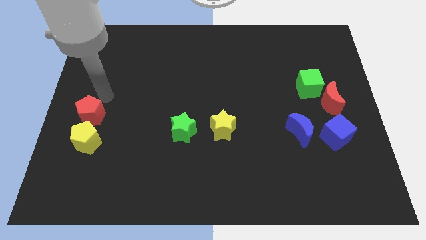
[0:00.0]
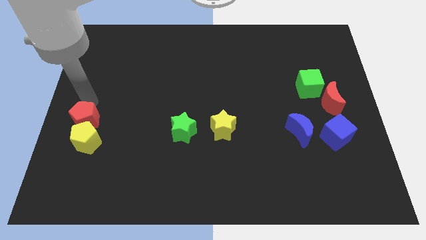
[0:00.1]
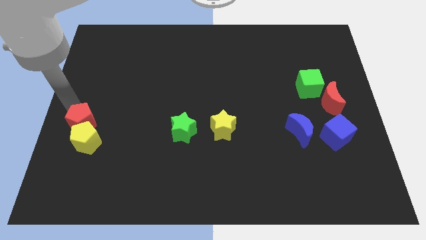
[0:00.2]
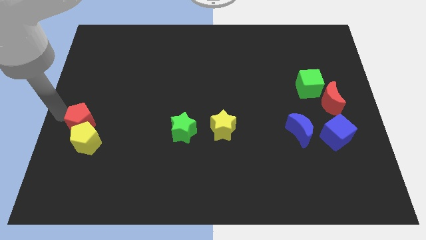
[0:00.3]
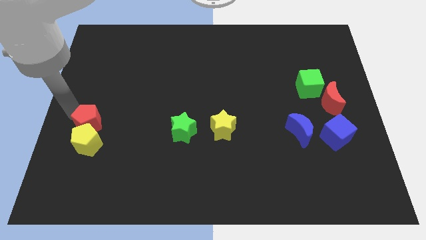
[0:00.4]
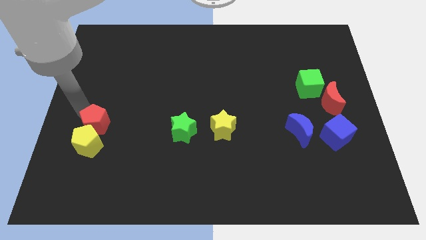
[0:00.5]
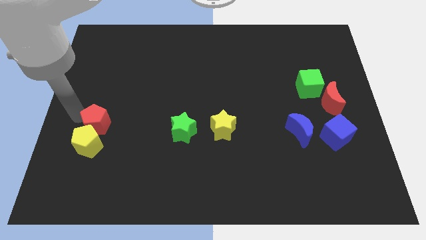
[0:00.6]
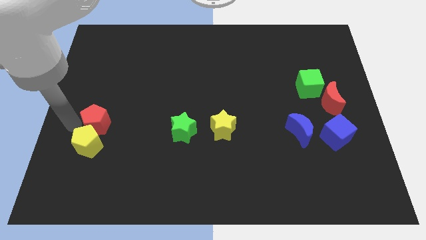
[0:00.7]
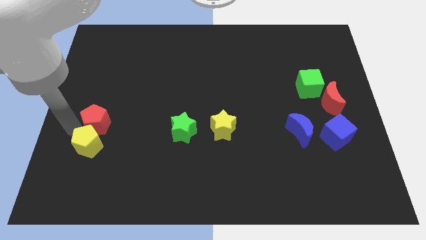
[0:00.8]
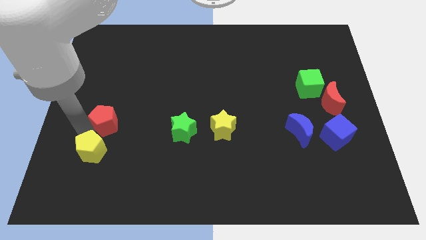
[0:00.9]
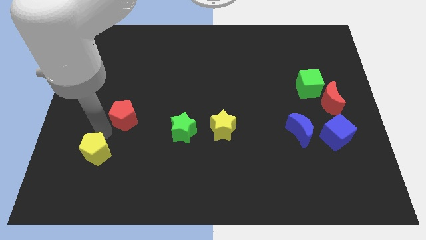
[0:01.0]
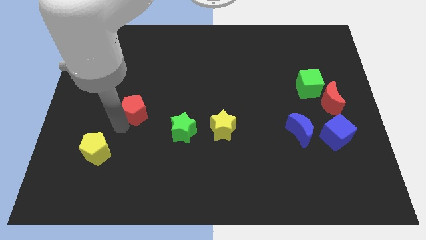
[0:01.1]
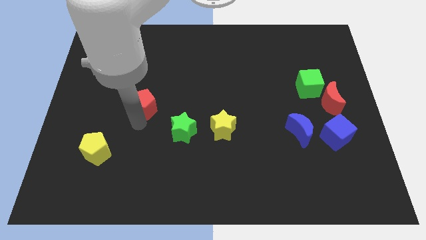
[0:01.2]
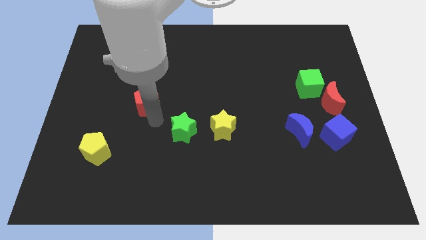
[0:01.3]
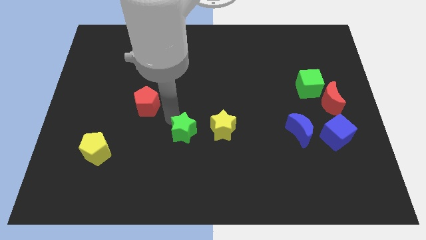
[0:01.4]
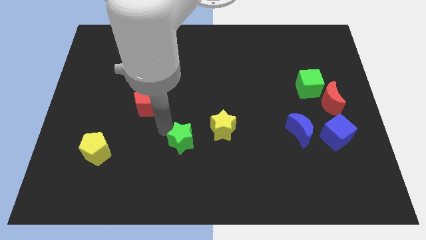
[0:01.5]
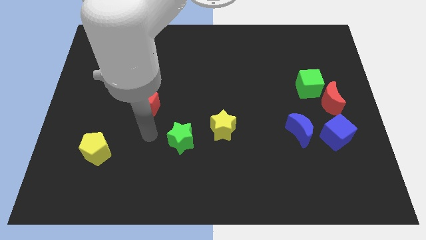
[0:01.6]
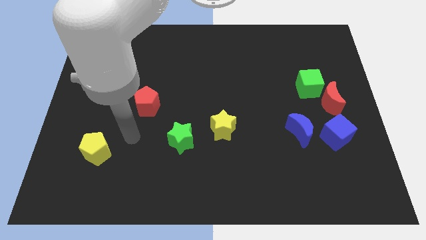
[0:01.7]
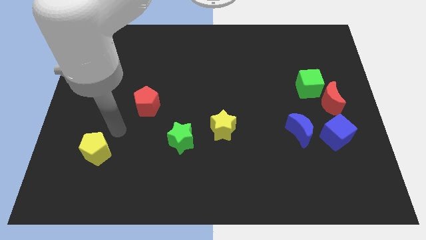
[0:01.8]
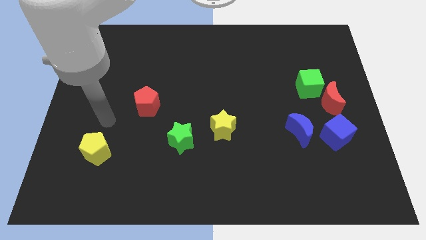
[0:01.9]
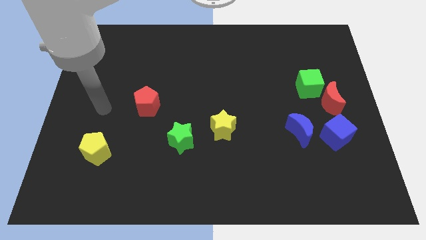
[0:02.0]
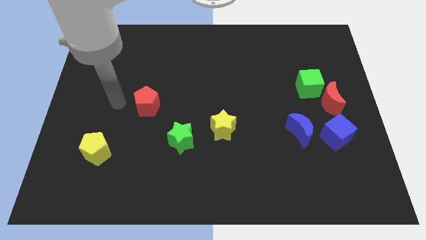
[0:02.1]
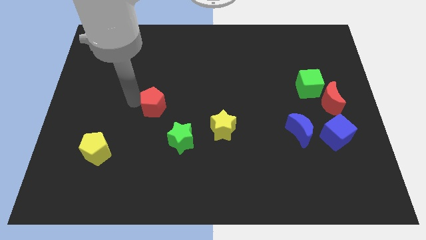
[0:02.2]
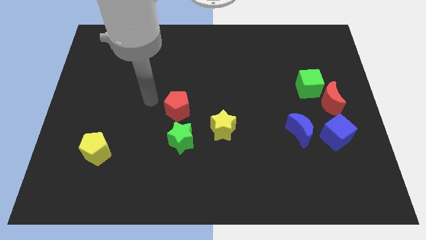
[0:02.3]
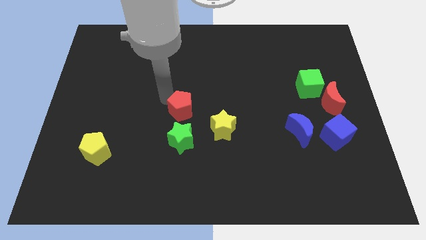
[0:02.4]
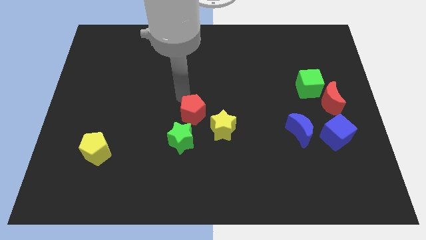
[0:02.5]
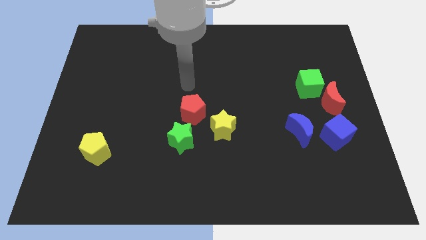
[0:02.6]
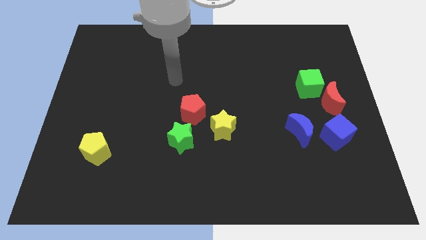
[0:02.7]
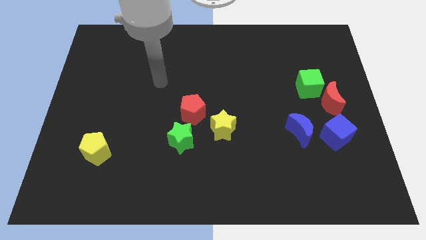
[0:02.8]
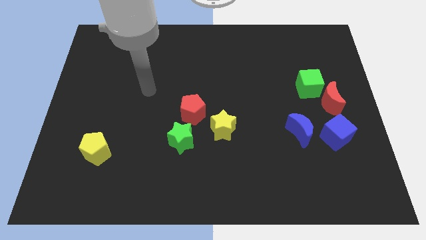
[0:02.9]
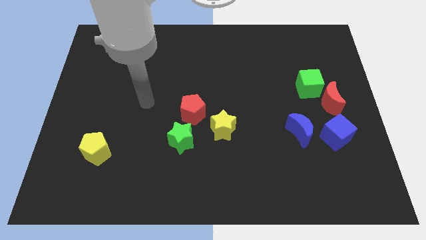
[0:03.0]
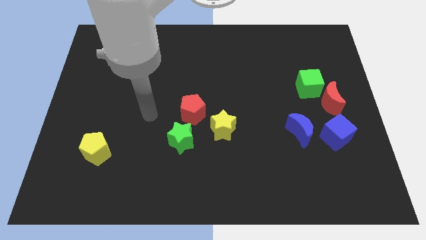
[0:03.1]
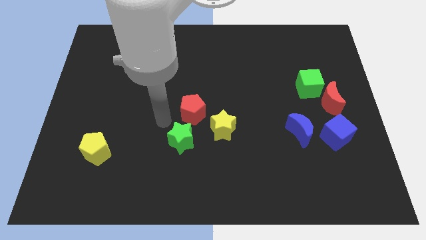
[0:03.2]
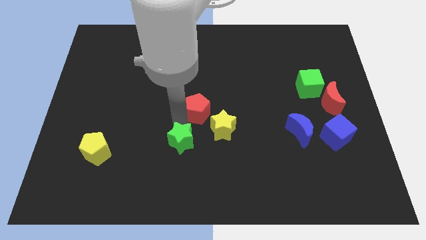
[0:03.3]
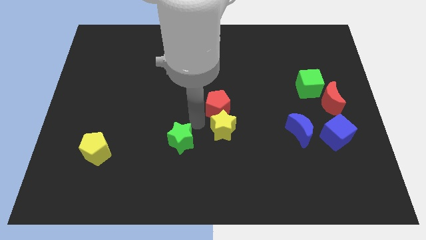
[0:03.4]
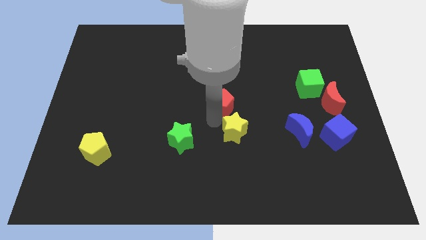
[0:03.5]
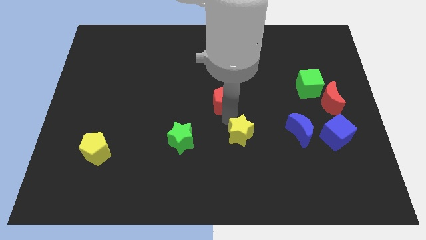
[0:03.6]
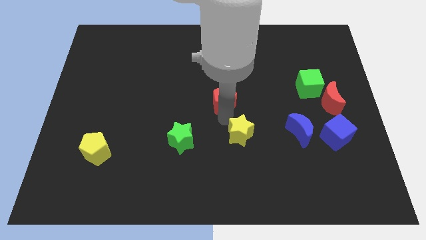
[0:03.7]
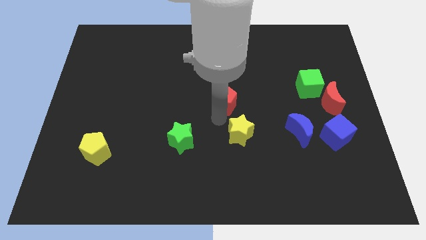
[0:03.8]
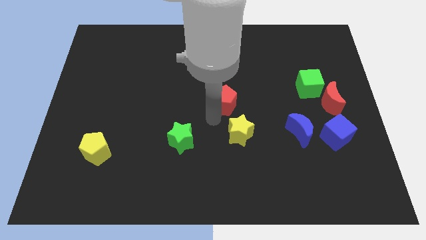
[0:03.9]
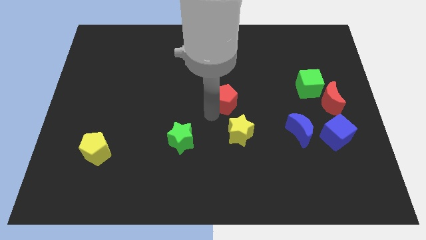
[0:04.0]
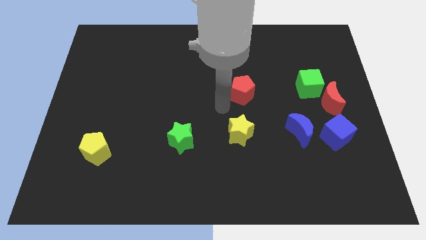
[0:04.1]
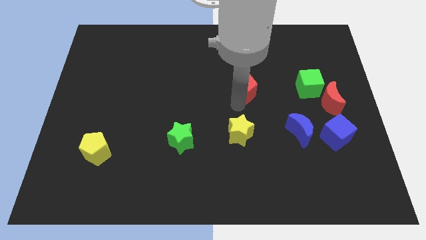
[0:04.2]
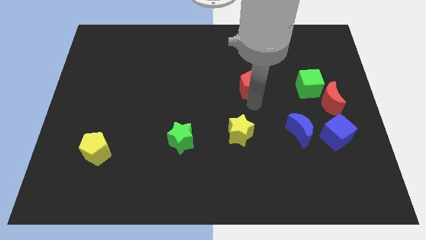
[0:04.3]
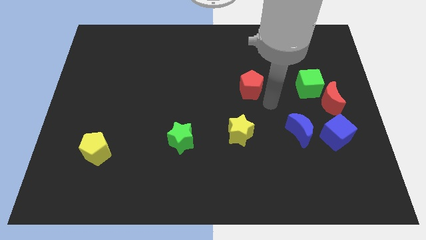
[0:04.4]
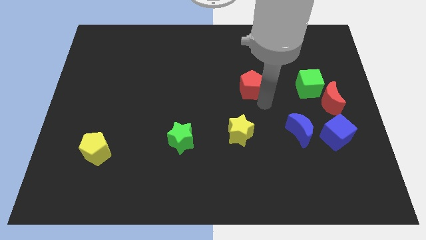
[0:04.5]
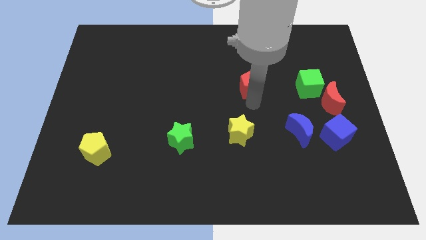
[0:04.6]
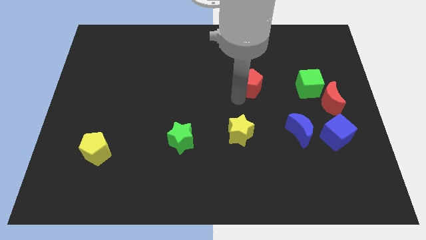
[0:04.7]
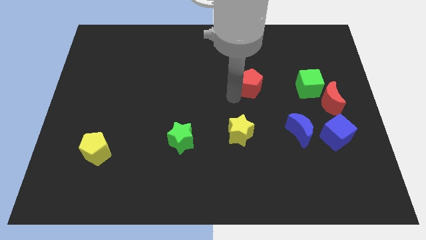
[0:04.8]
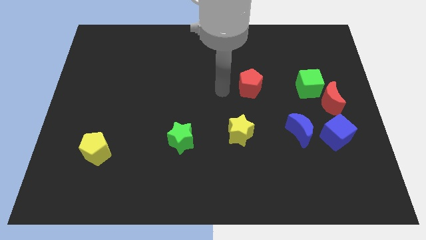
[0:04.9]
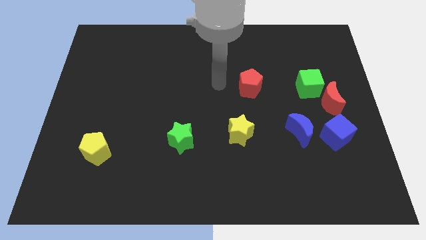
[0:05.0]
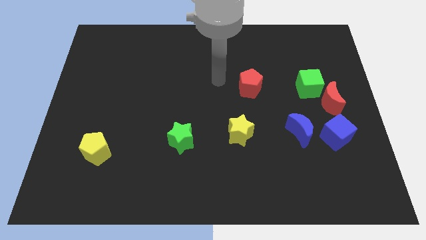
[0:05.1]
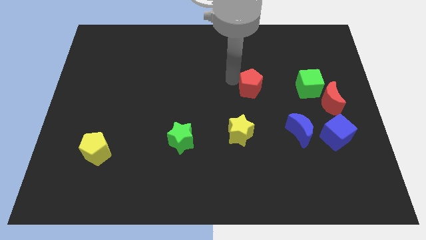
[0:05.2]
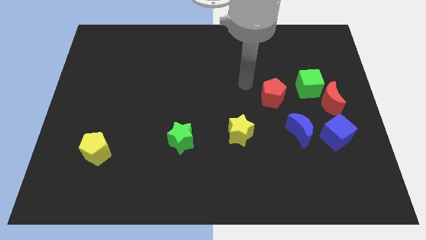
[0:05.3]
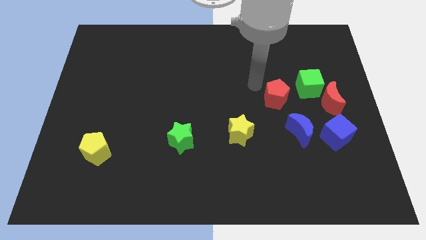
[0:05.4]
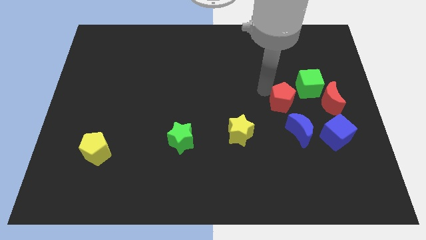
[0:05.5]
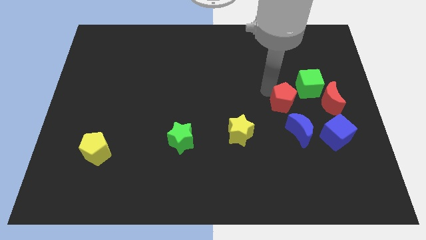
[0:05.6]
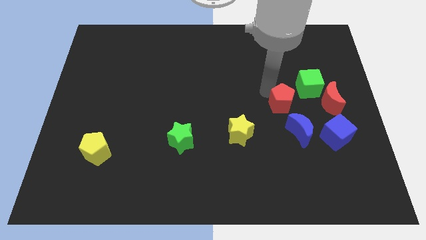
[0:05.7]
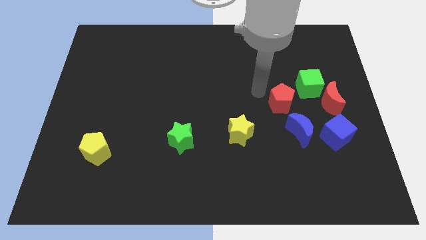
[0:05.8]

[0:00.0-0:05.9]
place the red pentagon close to the green cube

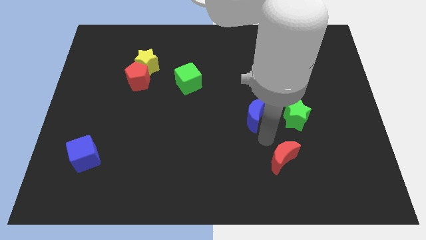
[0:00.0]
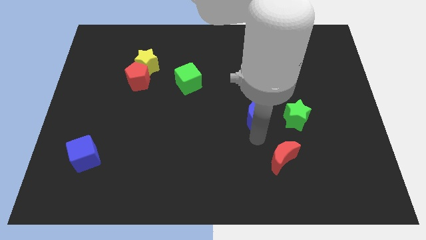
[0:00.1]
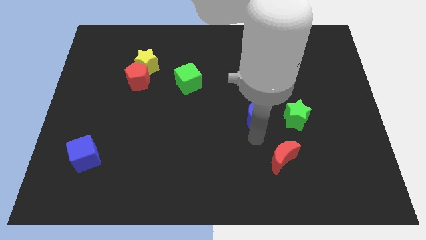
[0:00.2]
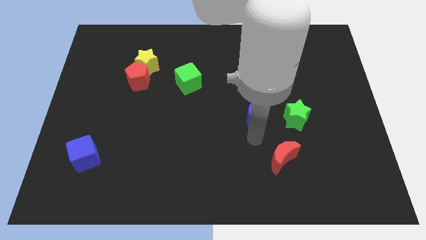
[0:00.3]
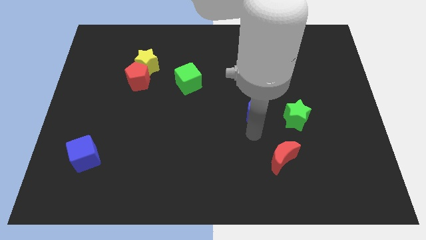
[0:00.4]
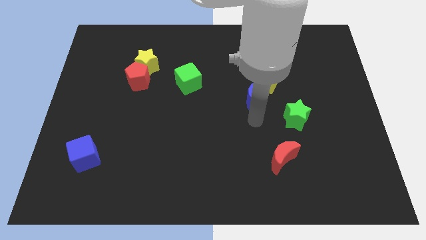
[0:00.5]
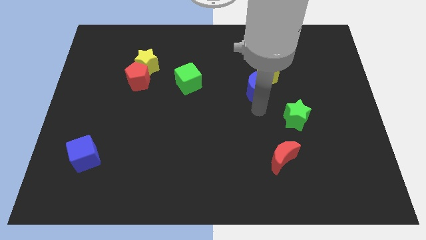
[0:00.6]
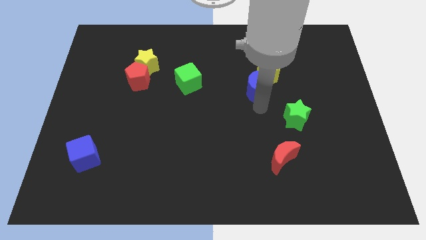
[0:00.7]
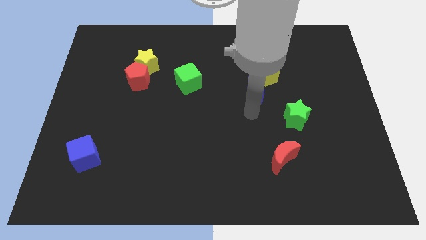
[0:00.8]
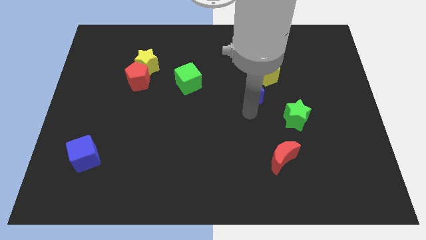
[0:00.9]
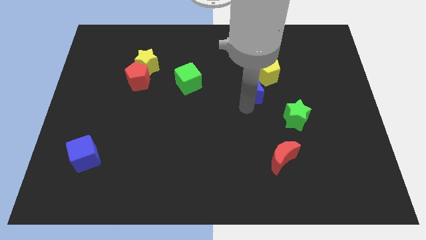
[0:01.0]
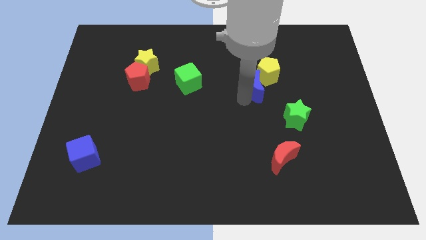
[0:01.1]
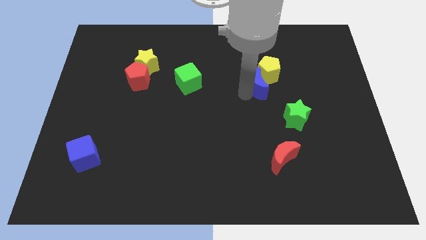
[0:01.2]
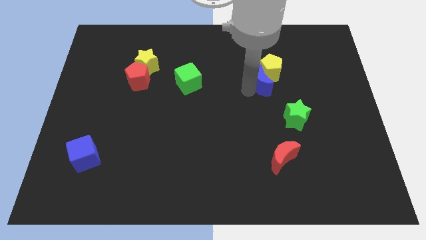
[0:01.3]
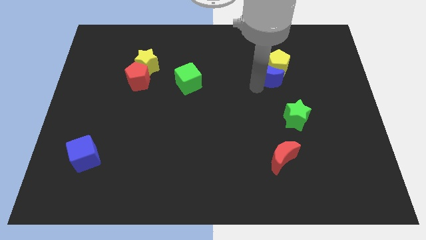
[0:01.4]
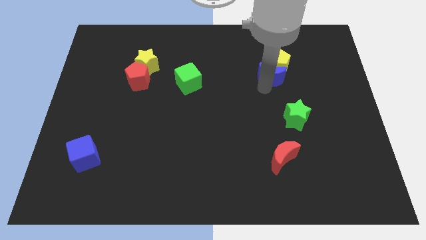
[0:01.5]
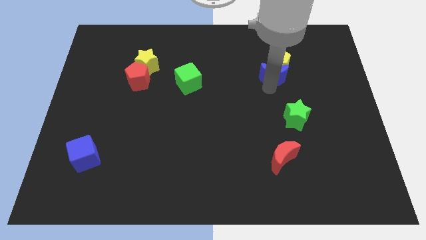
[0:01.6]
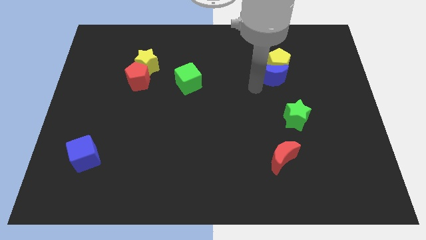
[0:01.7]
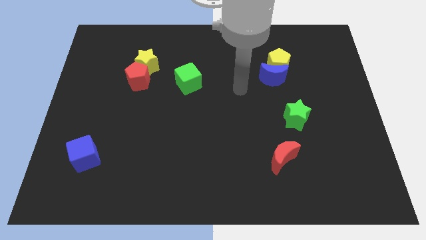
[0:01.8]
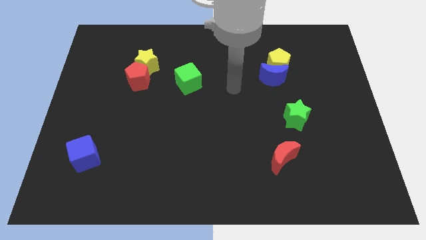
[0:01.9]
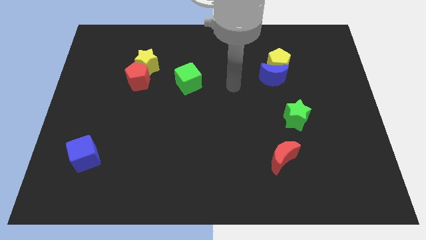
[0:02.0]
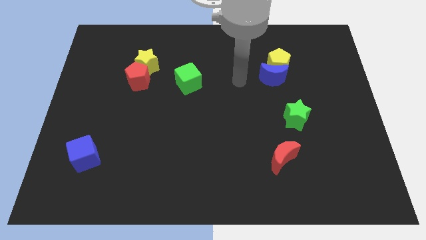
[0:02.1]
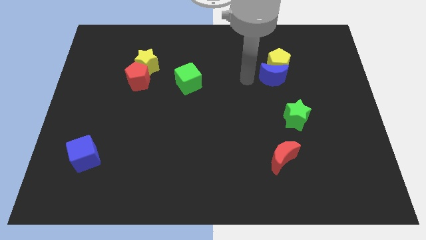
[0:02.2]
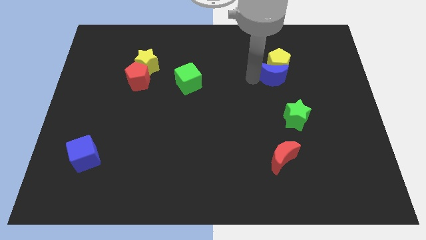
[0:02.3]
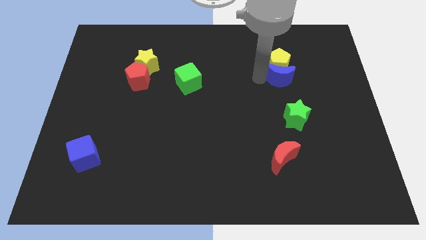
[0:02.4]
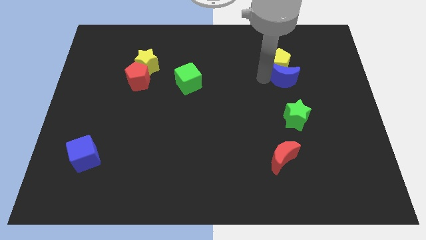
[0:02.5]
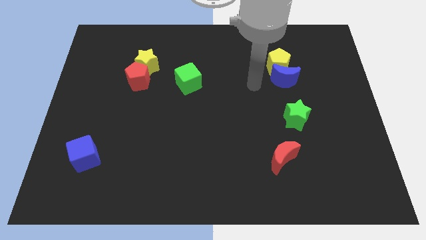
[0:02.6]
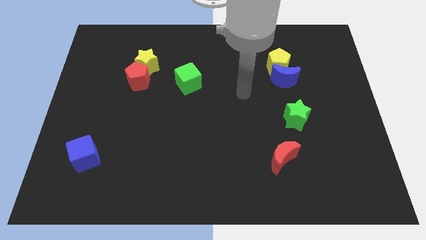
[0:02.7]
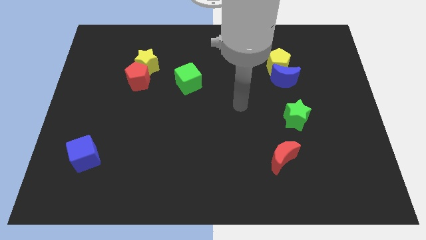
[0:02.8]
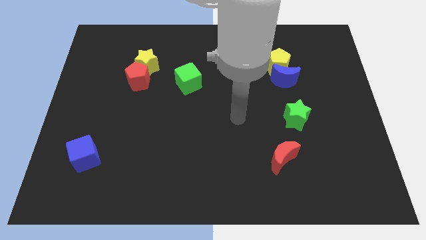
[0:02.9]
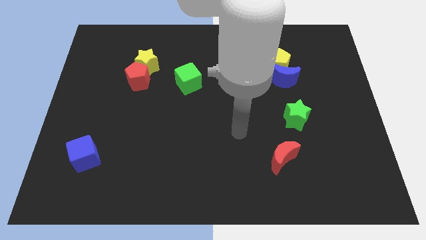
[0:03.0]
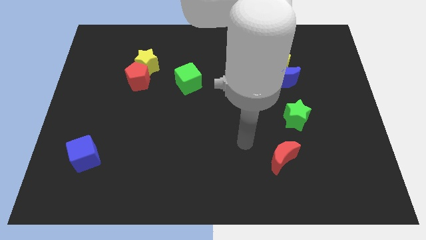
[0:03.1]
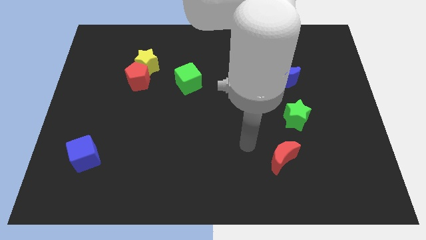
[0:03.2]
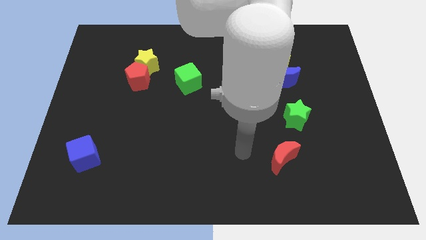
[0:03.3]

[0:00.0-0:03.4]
push the blue moon into the yellow pentagon
